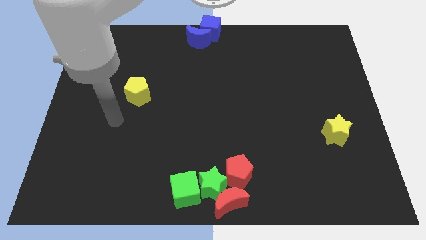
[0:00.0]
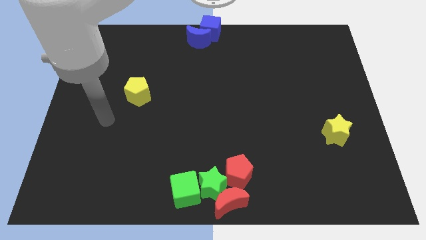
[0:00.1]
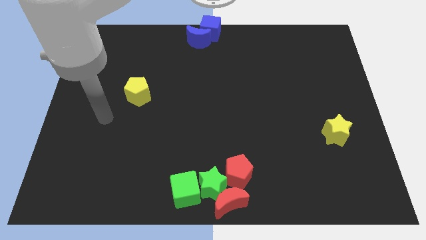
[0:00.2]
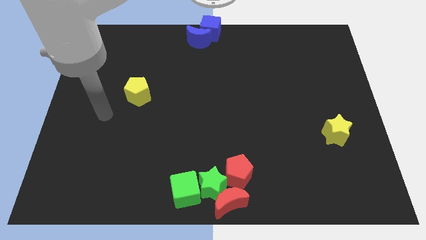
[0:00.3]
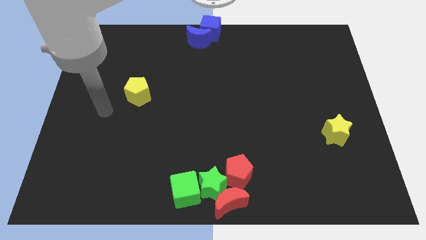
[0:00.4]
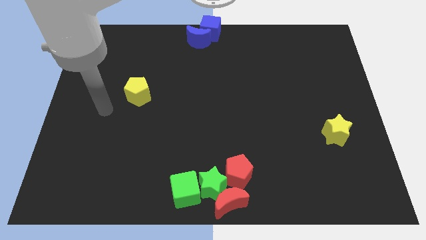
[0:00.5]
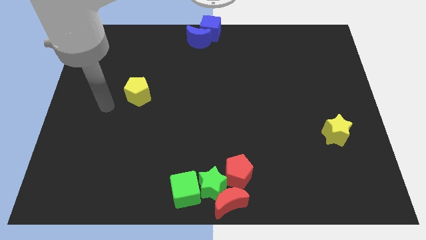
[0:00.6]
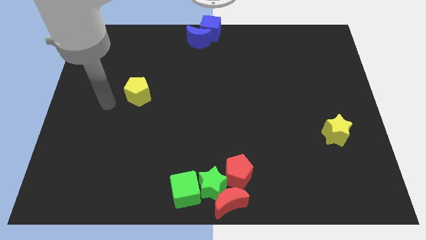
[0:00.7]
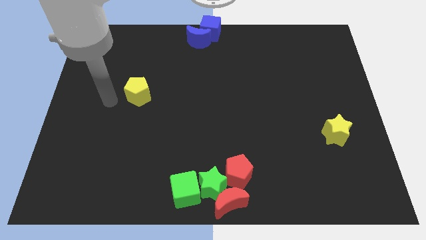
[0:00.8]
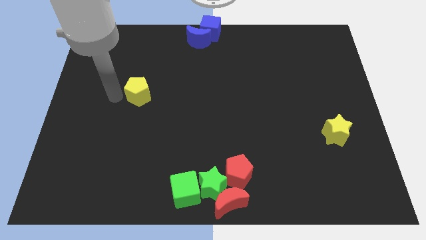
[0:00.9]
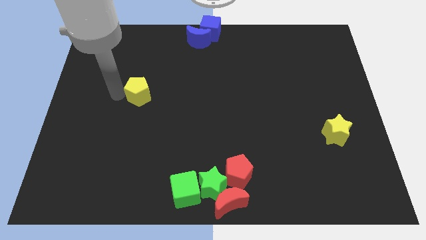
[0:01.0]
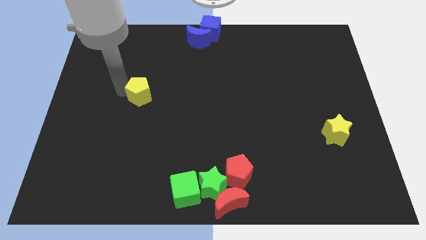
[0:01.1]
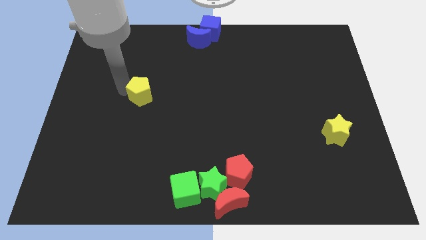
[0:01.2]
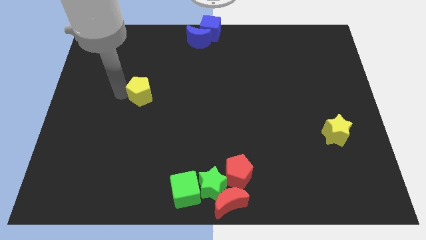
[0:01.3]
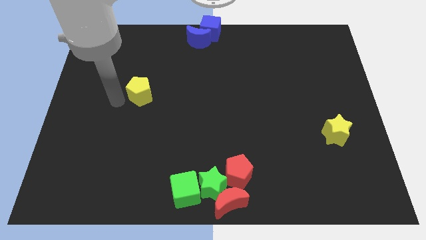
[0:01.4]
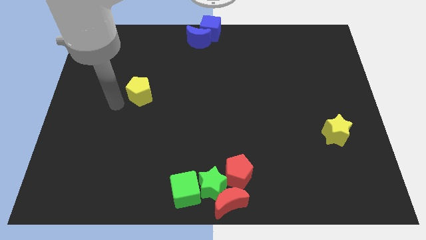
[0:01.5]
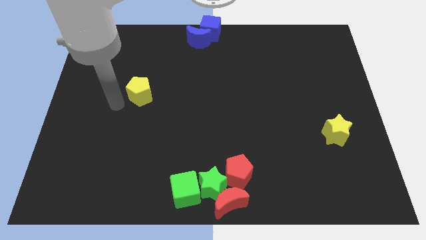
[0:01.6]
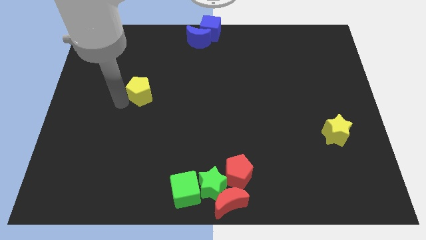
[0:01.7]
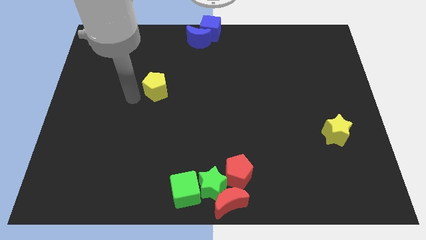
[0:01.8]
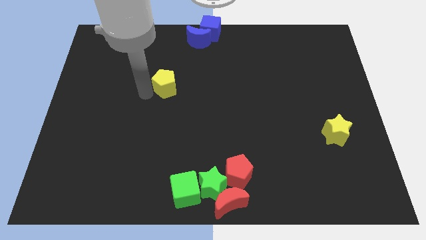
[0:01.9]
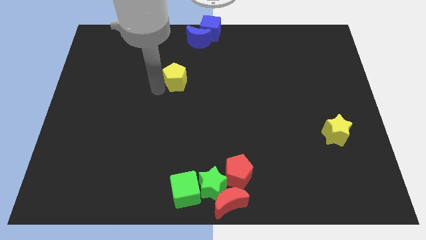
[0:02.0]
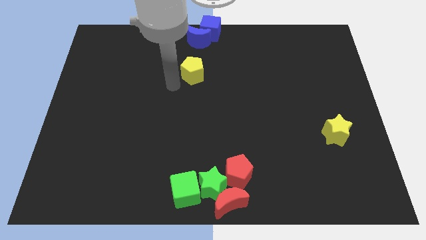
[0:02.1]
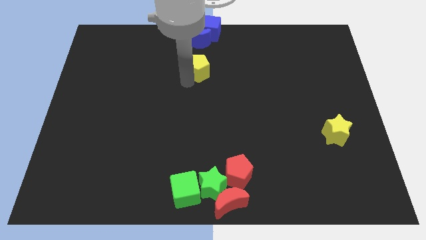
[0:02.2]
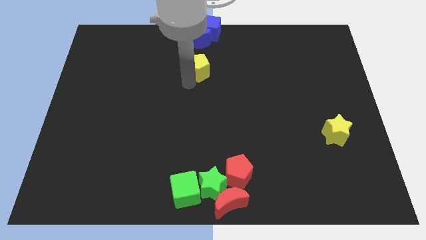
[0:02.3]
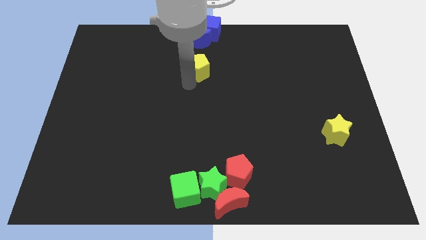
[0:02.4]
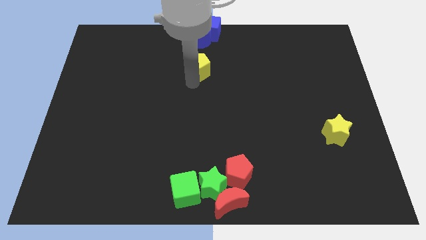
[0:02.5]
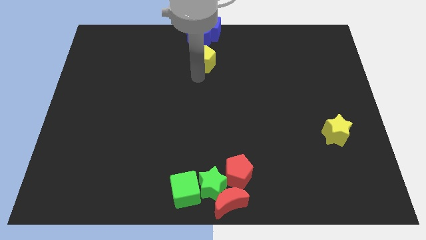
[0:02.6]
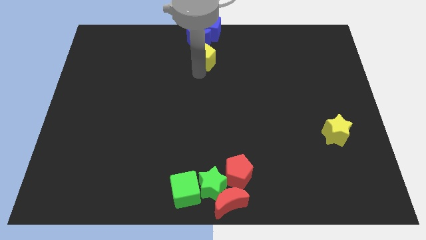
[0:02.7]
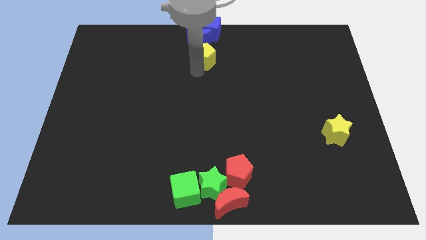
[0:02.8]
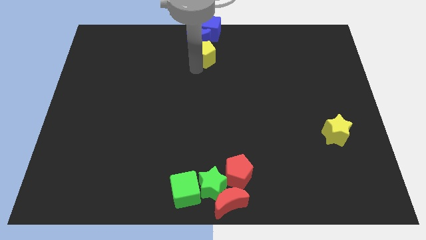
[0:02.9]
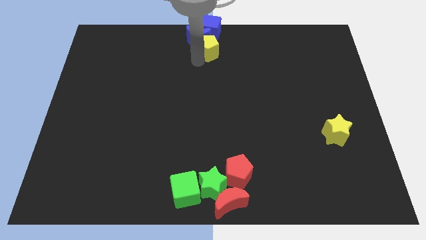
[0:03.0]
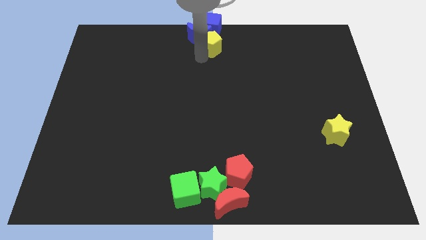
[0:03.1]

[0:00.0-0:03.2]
push the yellow pentagon into the blue moon

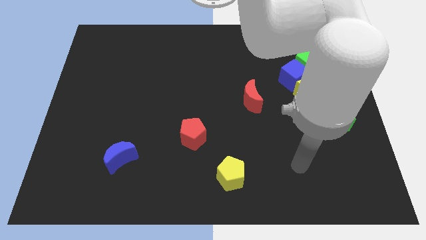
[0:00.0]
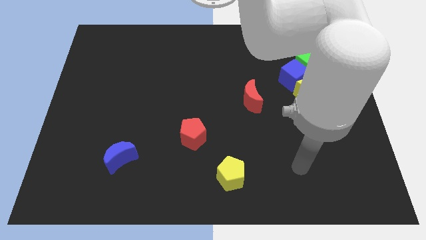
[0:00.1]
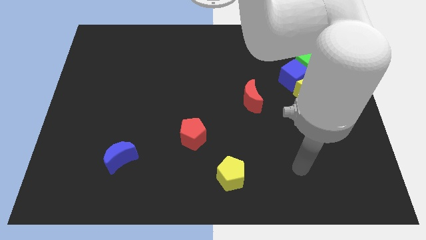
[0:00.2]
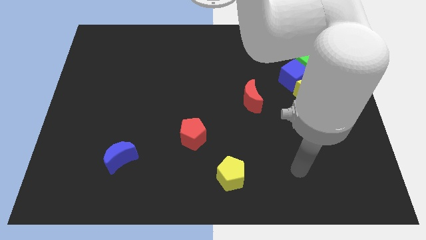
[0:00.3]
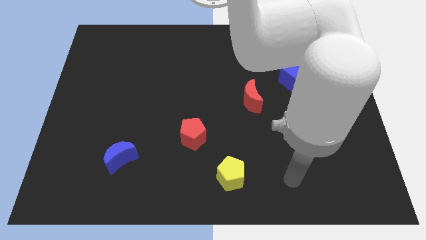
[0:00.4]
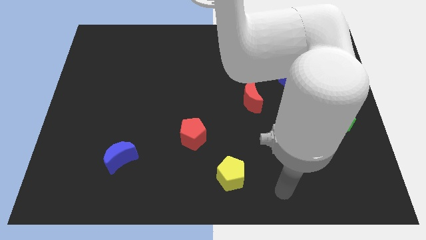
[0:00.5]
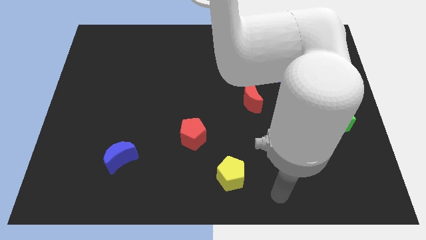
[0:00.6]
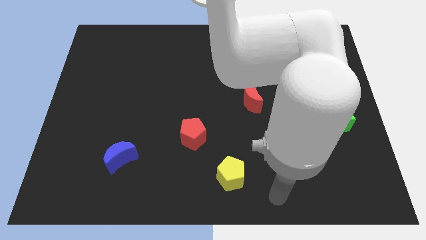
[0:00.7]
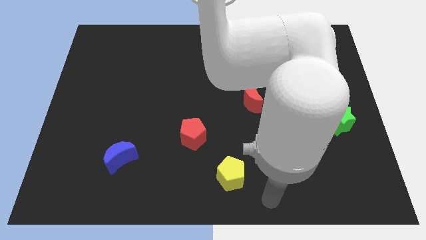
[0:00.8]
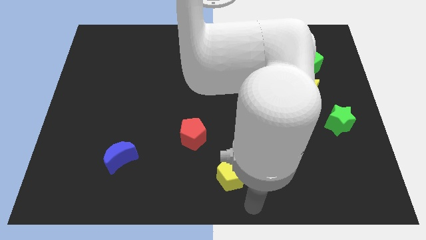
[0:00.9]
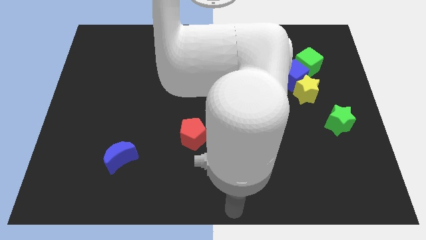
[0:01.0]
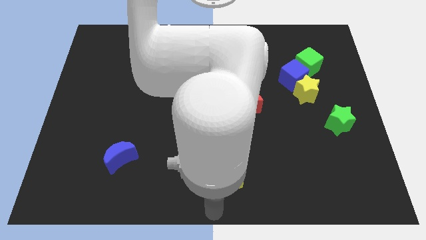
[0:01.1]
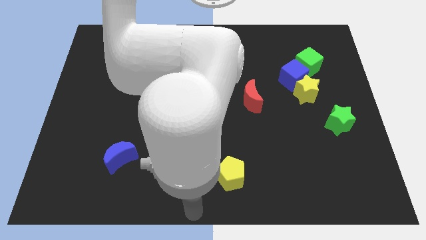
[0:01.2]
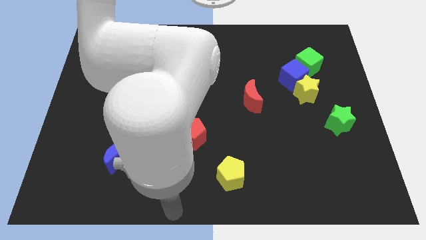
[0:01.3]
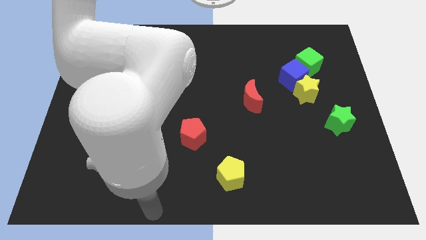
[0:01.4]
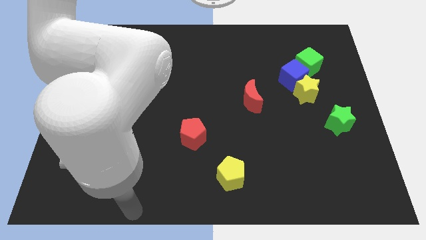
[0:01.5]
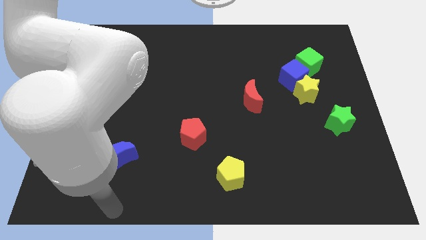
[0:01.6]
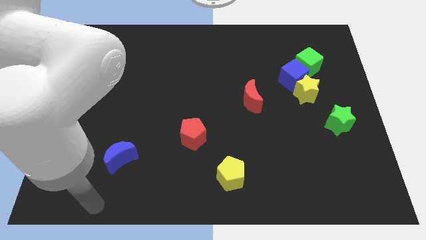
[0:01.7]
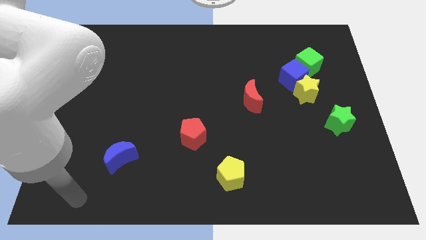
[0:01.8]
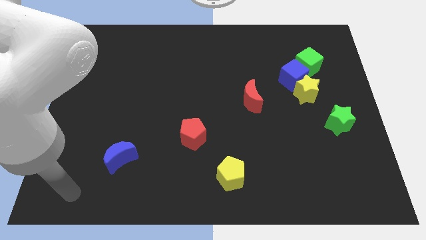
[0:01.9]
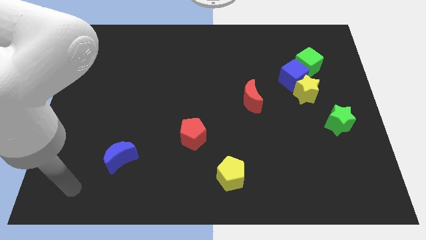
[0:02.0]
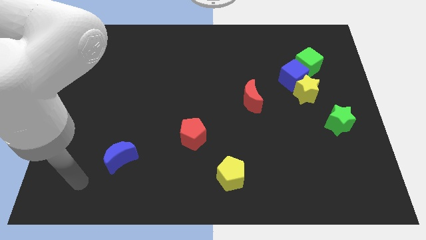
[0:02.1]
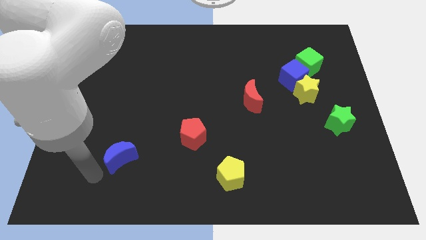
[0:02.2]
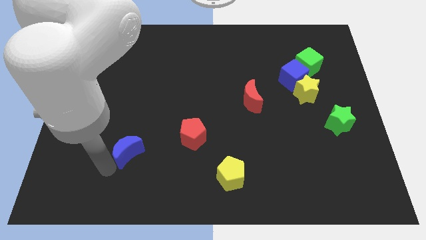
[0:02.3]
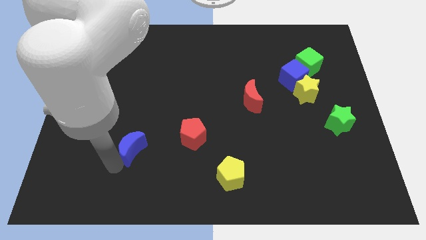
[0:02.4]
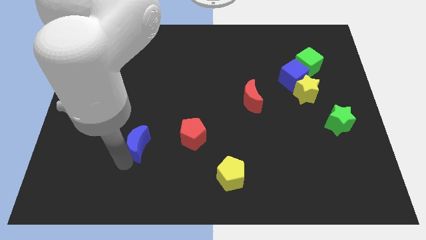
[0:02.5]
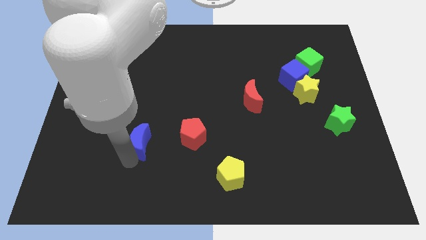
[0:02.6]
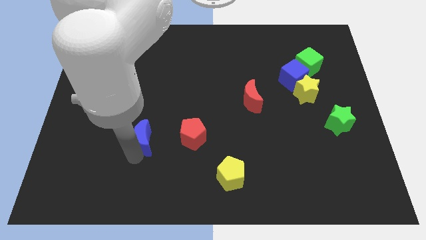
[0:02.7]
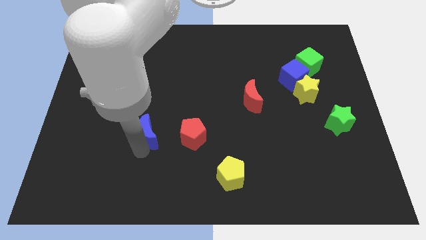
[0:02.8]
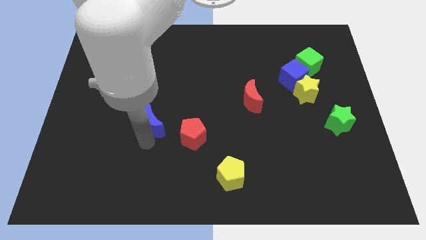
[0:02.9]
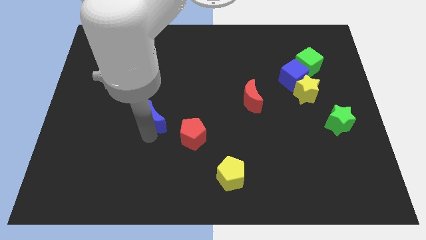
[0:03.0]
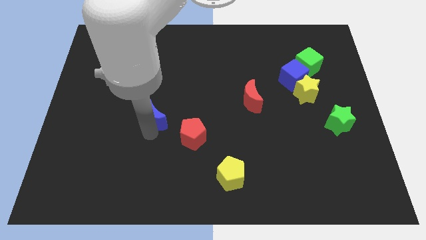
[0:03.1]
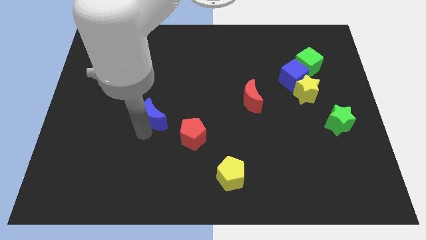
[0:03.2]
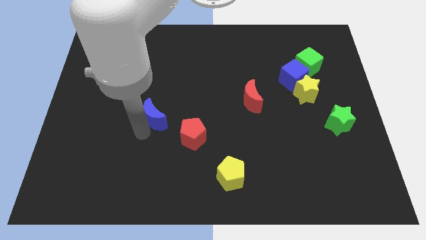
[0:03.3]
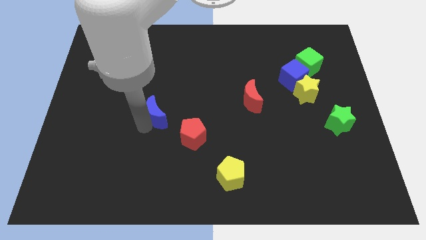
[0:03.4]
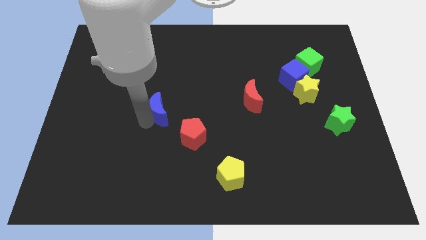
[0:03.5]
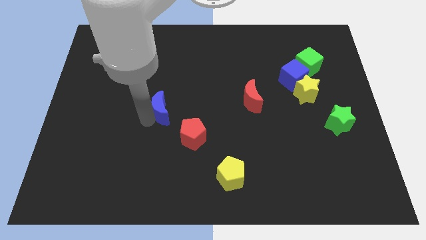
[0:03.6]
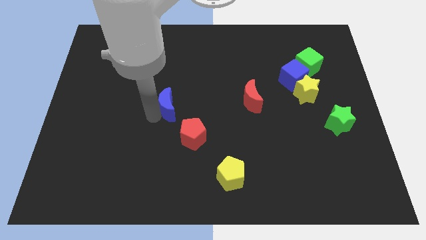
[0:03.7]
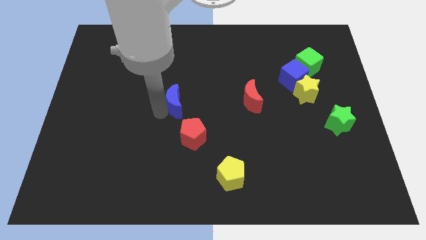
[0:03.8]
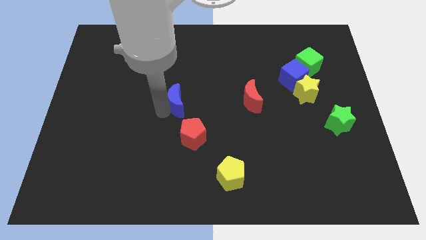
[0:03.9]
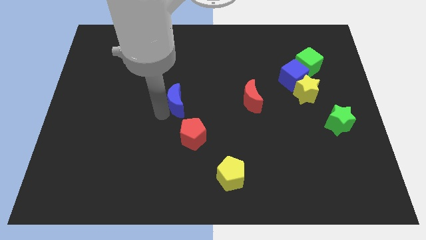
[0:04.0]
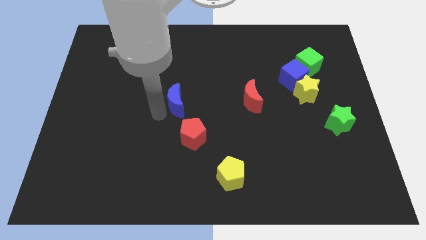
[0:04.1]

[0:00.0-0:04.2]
place the blue crescent above the red pentagon

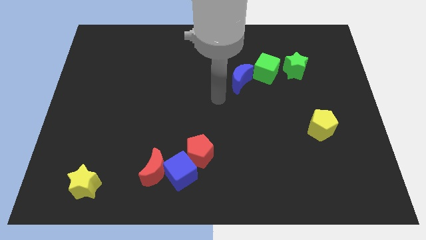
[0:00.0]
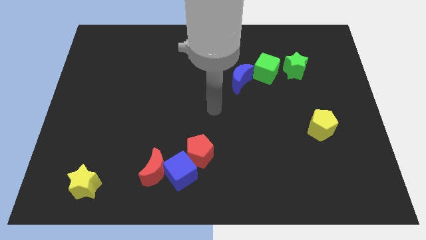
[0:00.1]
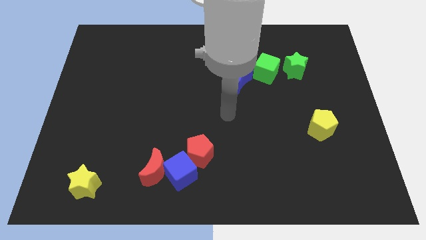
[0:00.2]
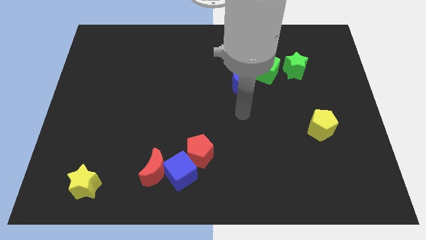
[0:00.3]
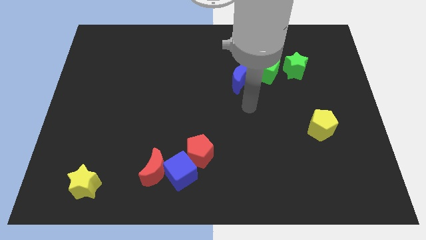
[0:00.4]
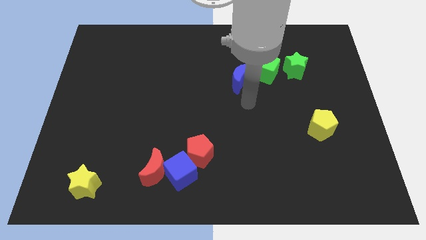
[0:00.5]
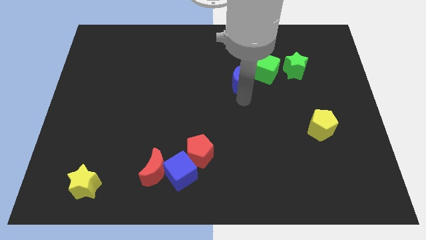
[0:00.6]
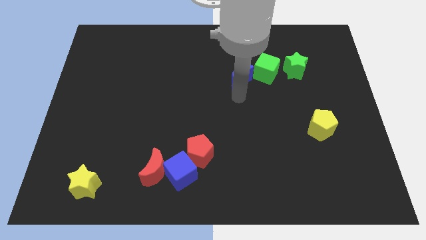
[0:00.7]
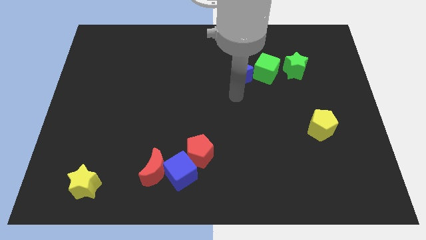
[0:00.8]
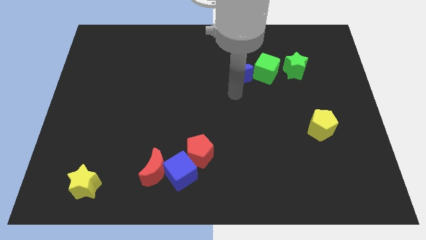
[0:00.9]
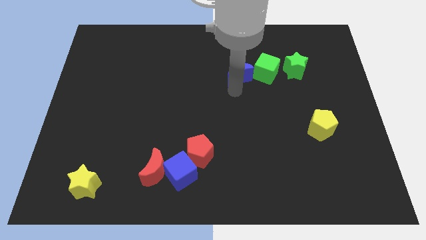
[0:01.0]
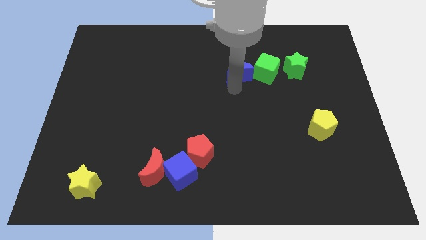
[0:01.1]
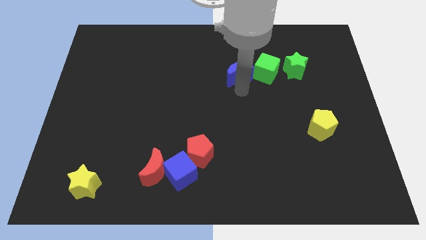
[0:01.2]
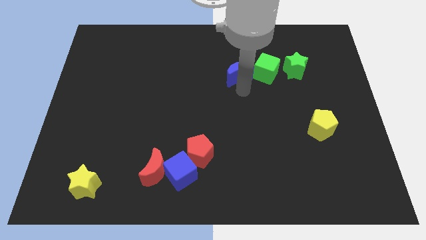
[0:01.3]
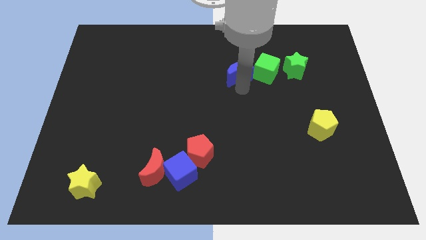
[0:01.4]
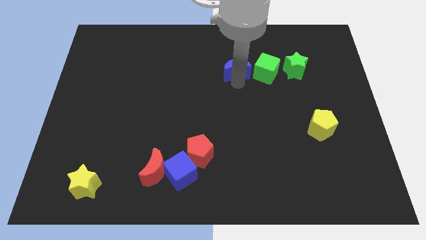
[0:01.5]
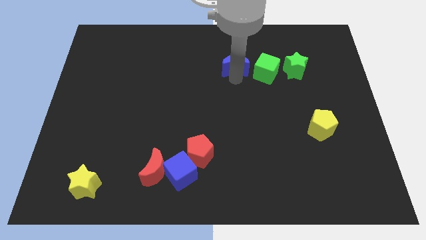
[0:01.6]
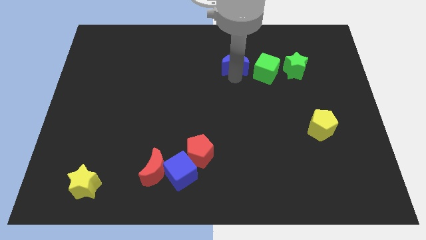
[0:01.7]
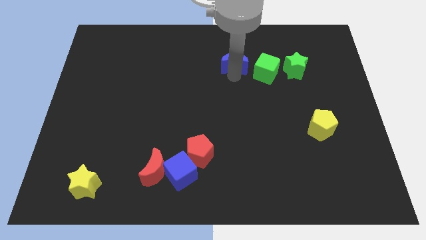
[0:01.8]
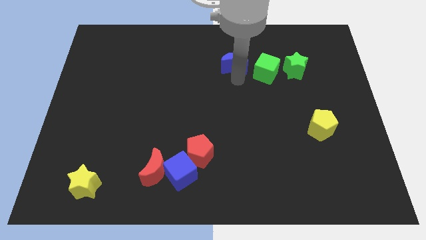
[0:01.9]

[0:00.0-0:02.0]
push the blue crescent to the left of the green cube
